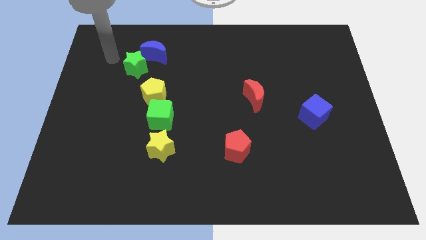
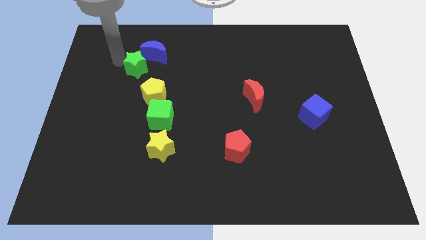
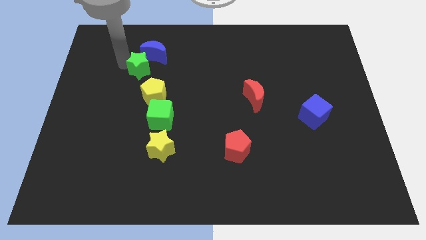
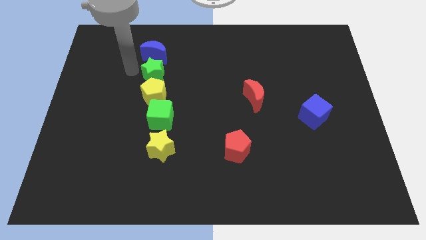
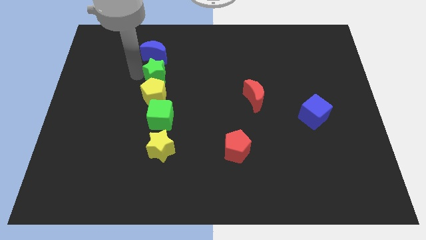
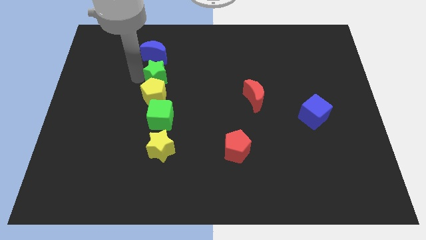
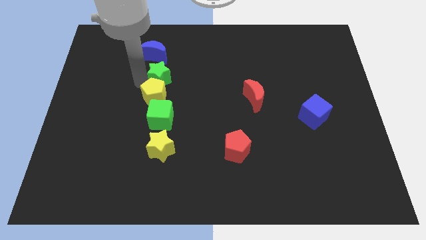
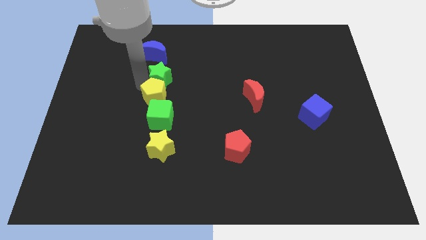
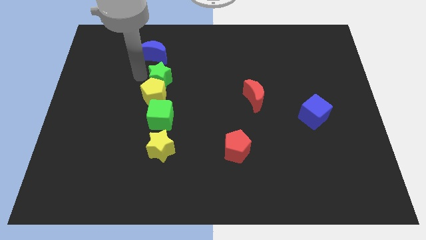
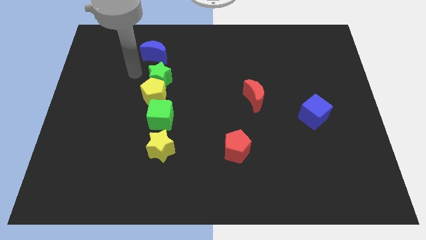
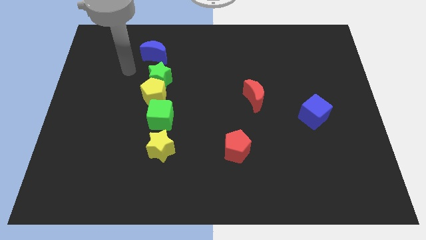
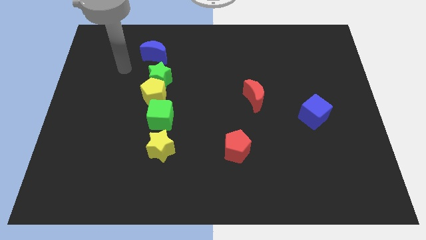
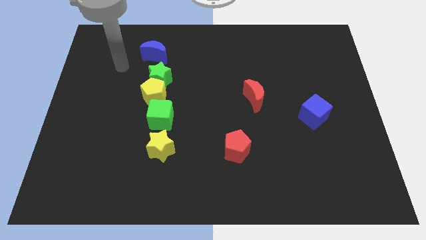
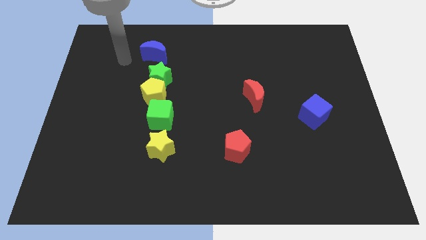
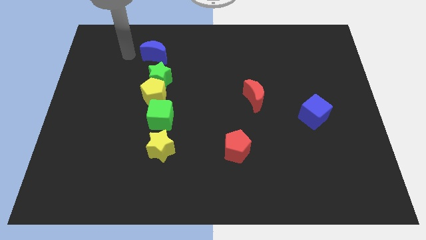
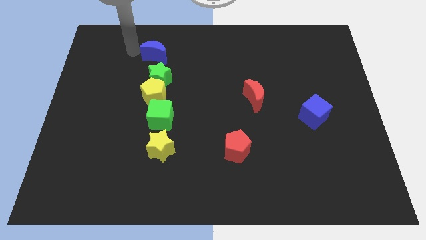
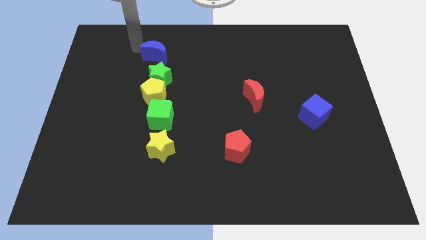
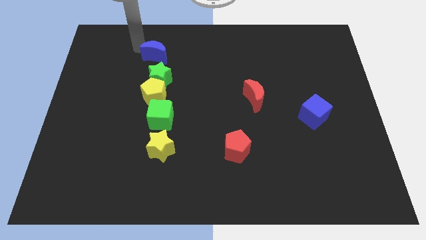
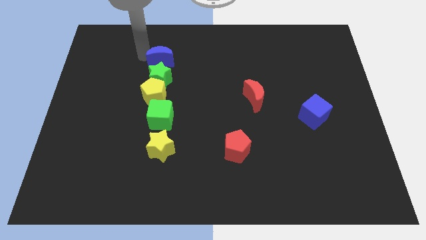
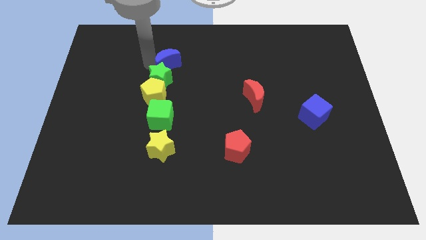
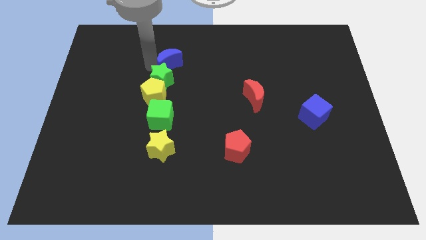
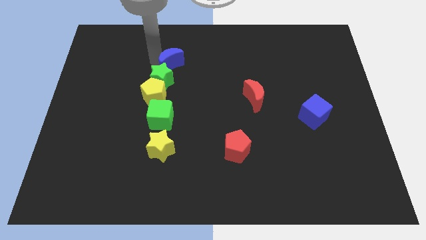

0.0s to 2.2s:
move the green star and blue moon to the vertical line

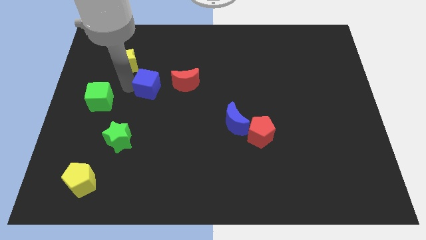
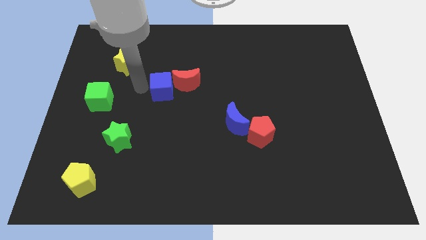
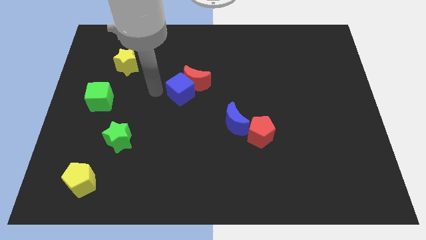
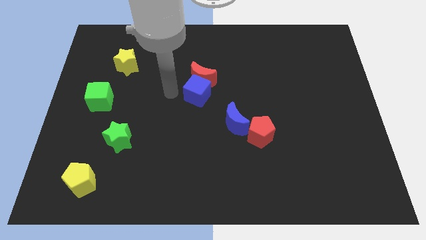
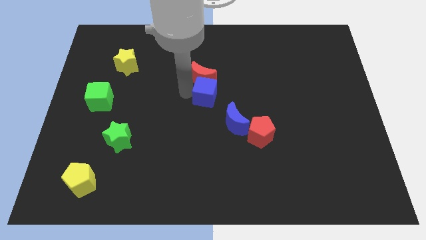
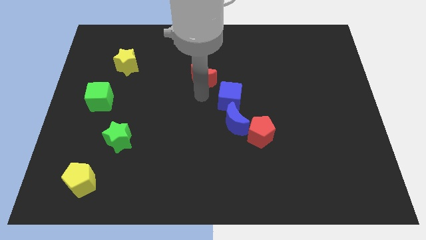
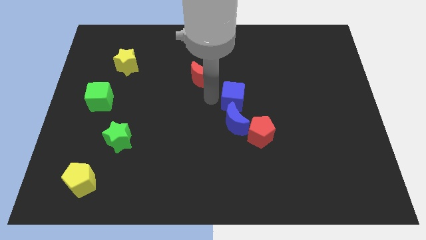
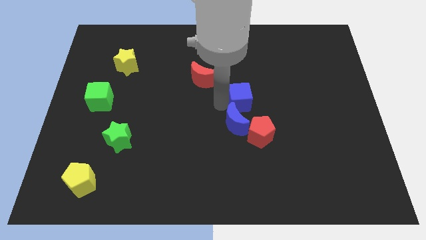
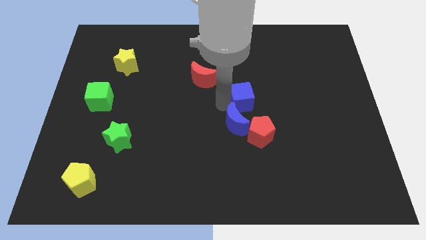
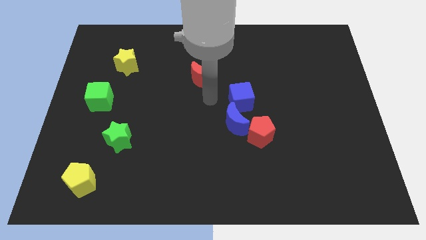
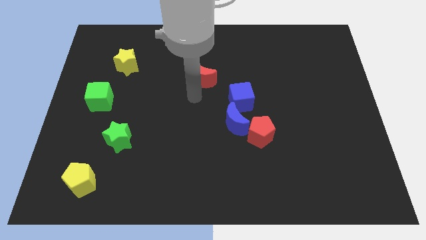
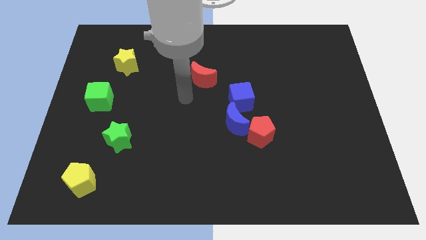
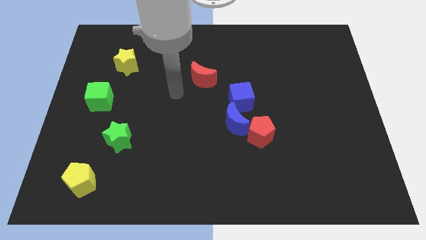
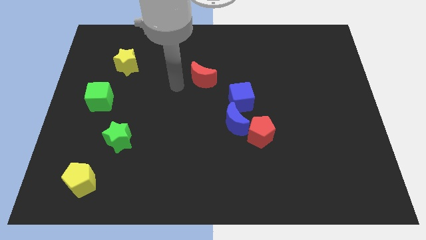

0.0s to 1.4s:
place the blue cube above the blue crescent

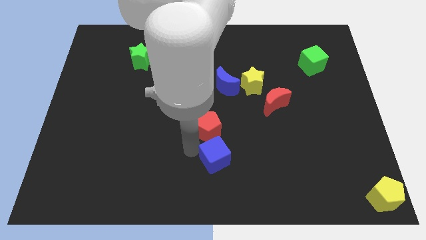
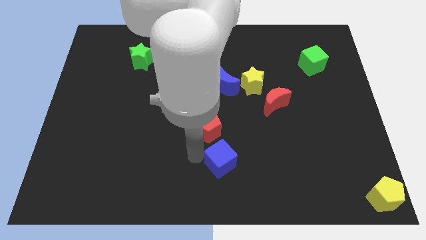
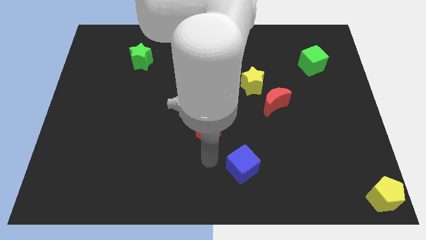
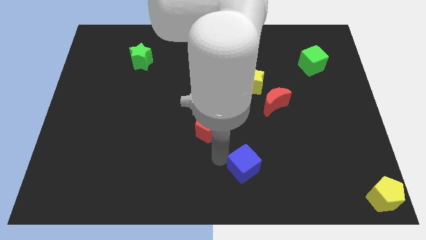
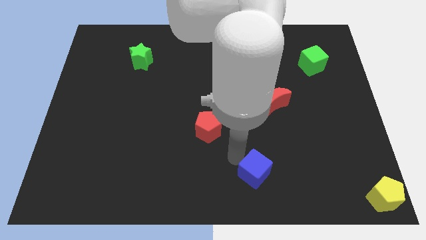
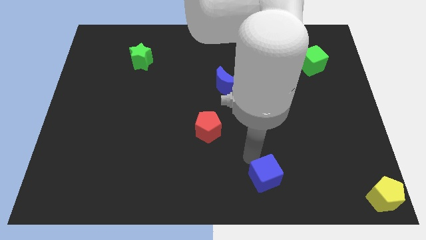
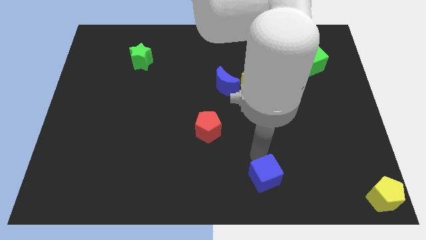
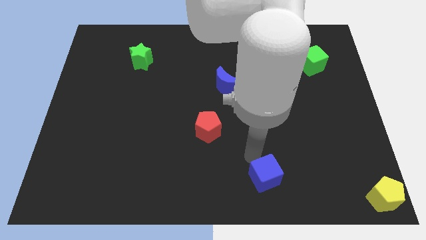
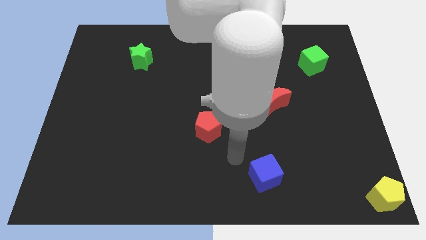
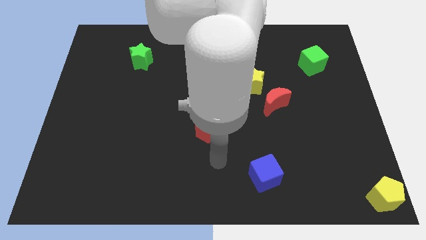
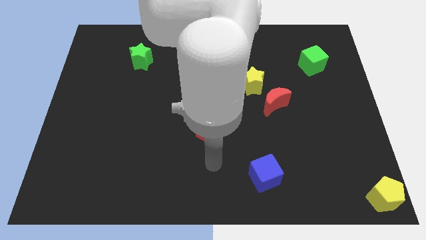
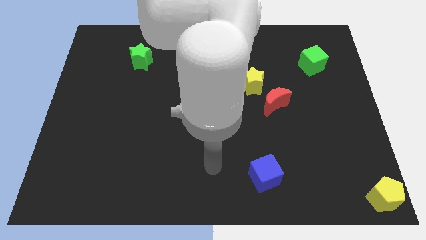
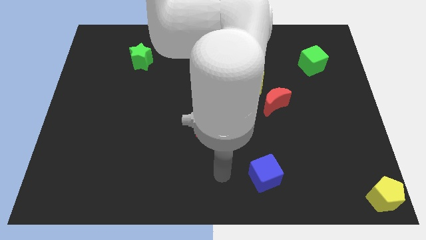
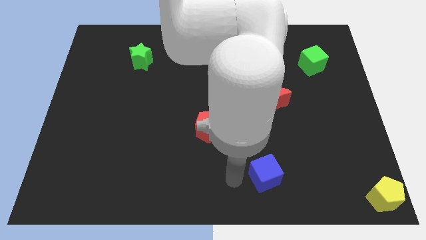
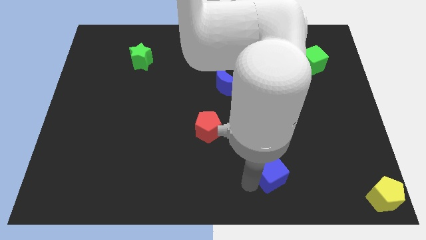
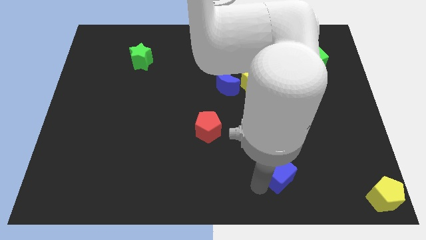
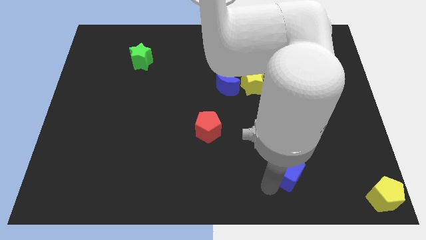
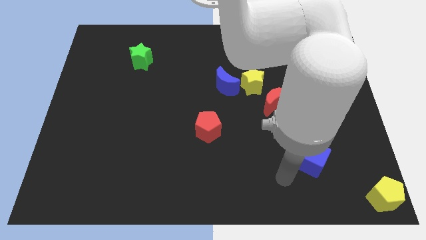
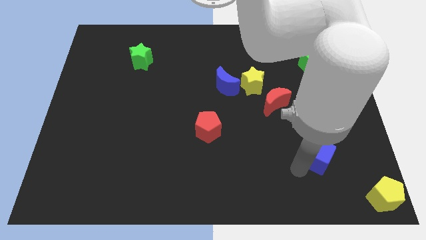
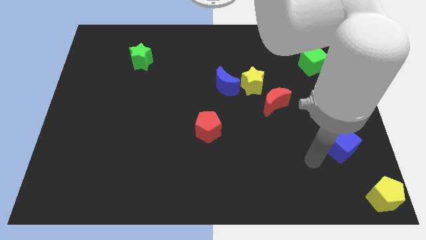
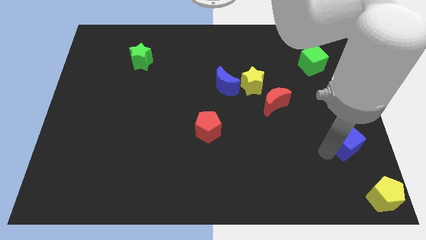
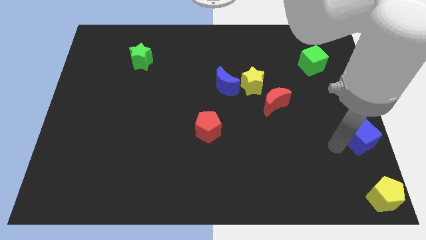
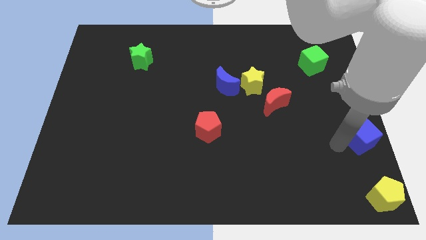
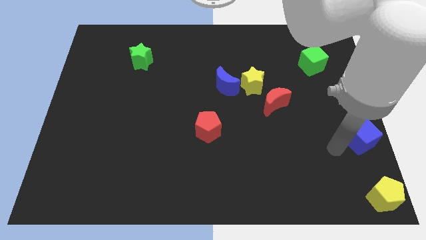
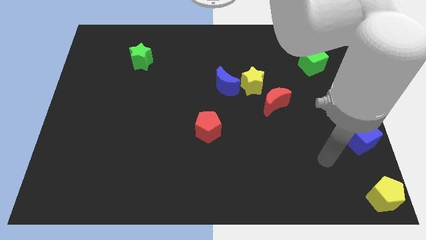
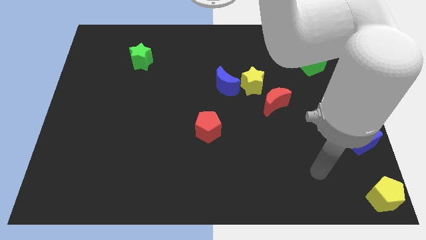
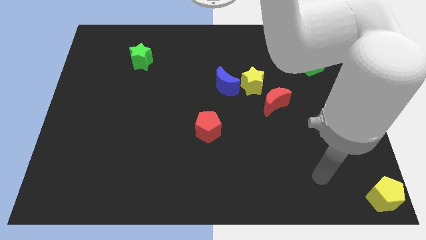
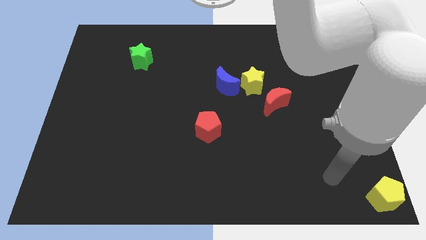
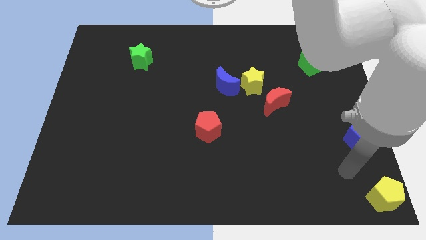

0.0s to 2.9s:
move the blue cube parallel to the yellow pentagon

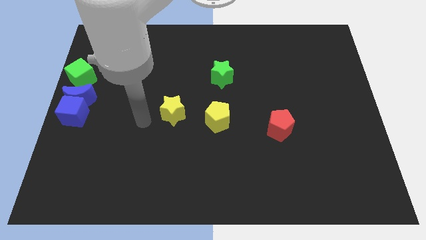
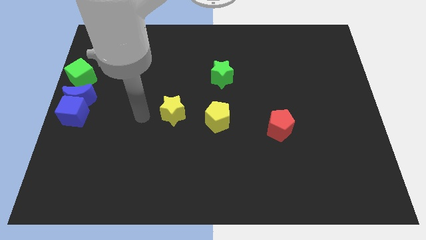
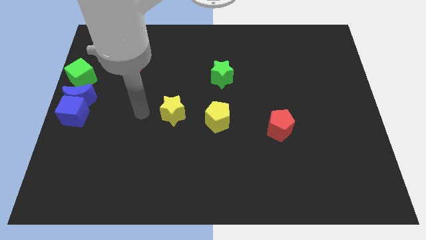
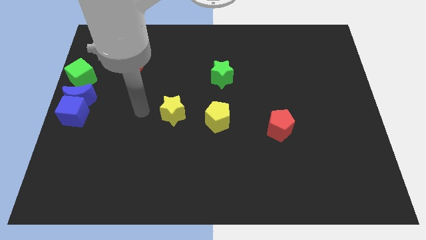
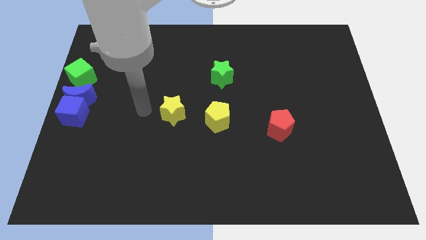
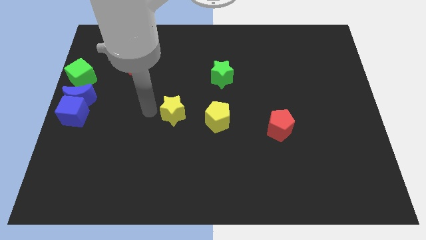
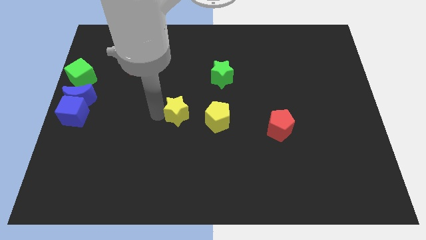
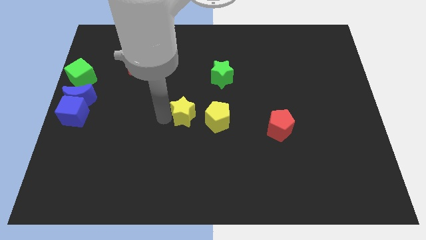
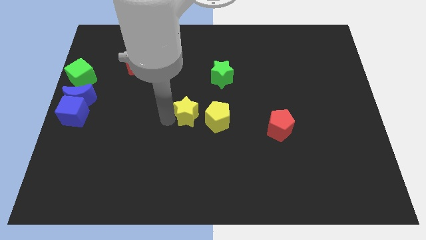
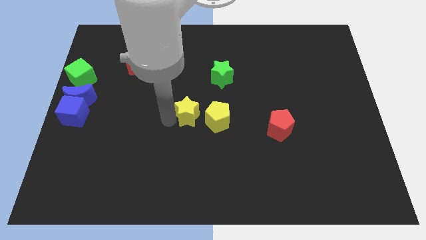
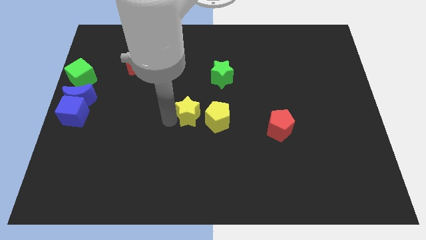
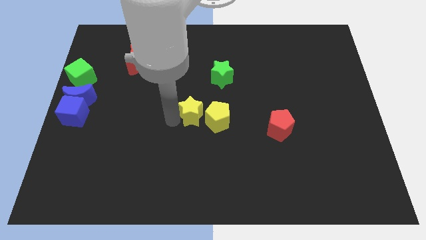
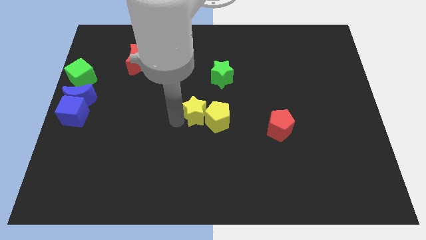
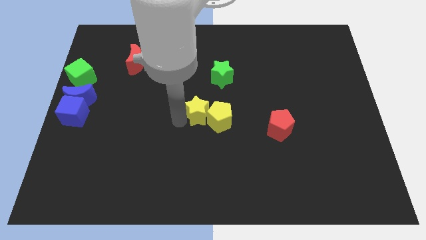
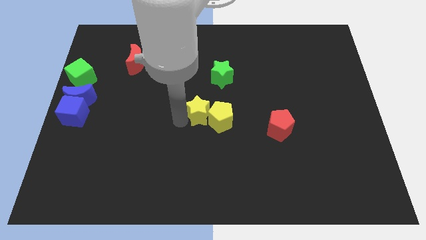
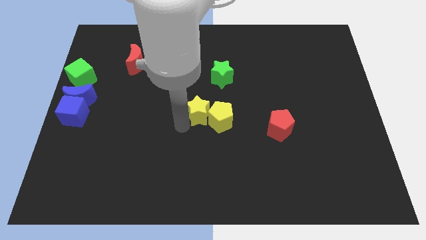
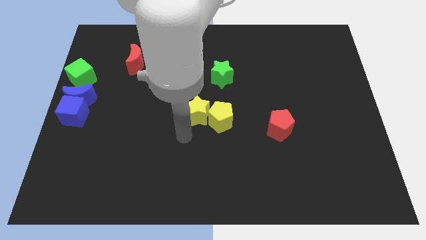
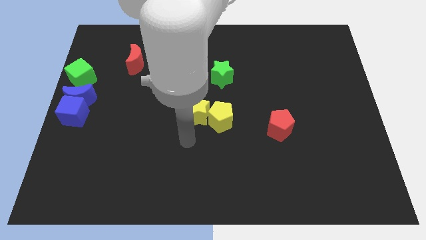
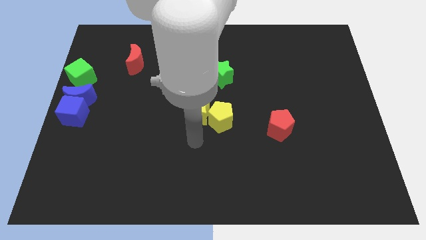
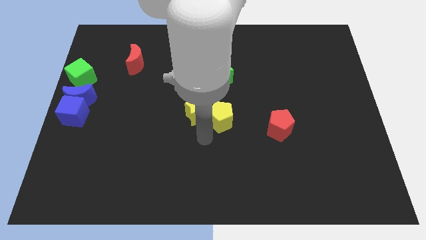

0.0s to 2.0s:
put the yellow blocks together

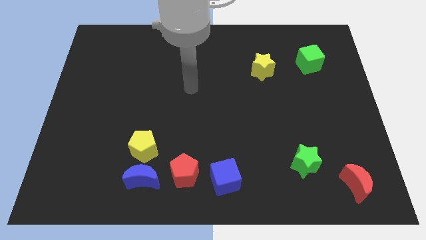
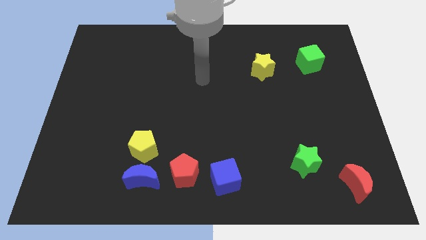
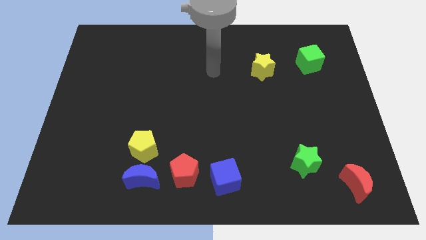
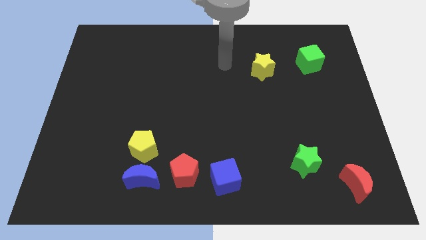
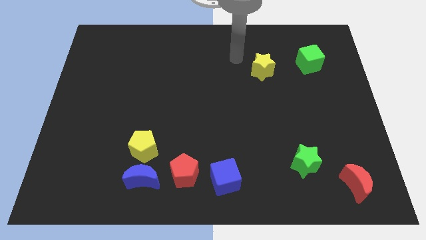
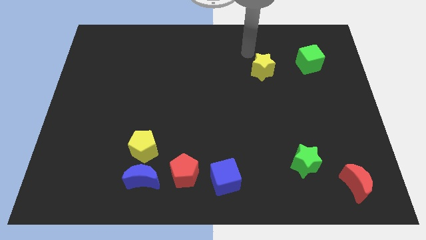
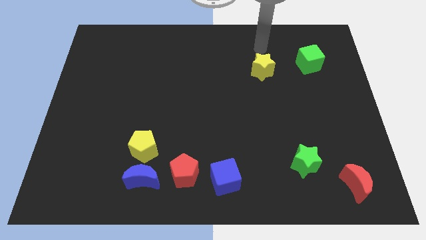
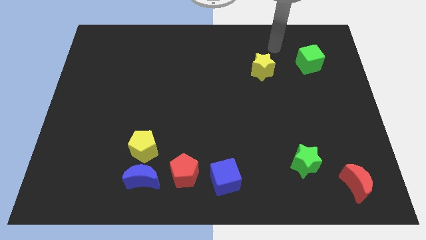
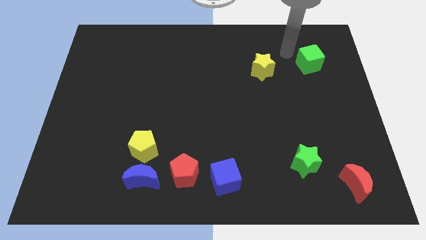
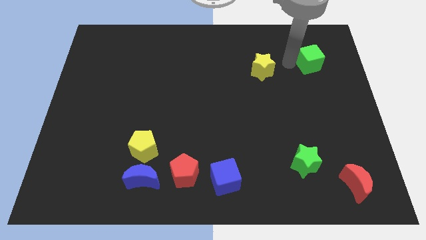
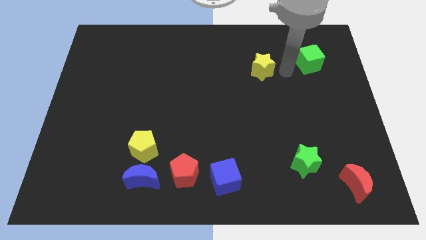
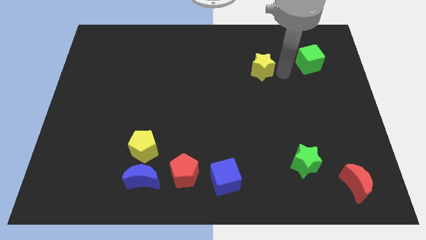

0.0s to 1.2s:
place your arm in between yellow star and green cube
